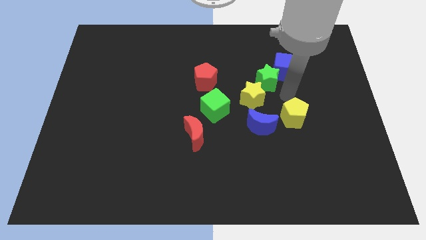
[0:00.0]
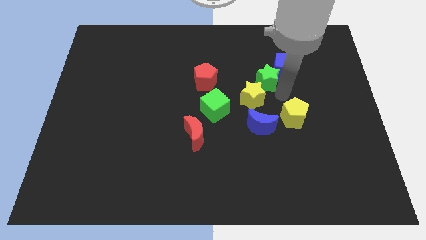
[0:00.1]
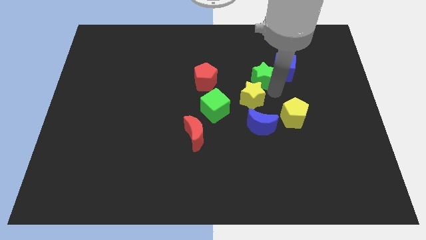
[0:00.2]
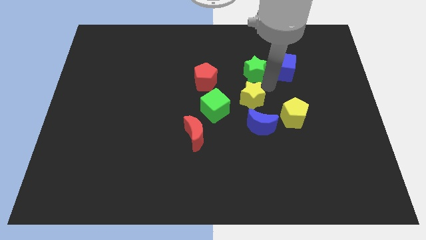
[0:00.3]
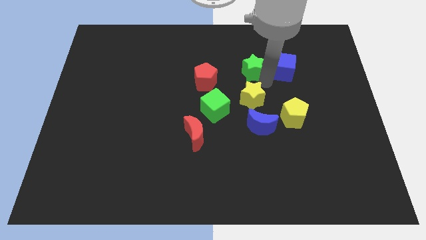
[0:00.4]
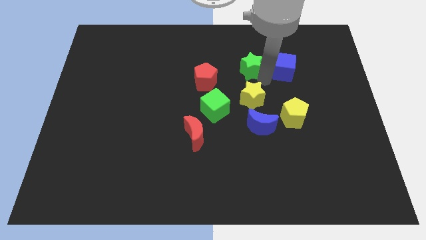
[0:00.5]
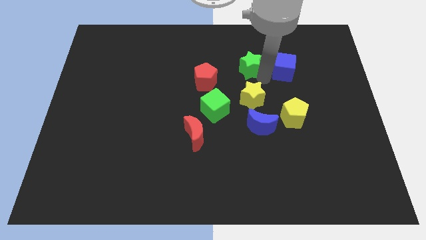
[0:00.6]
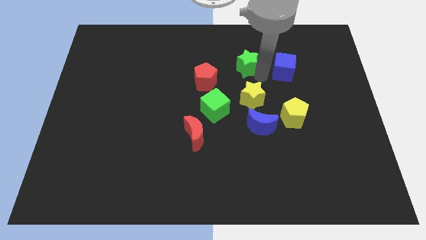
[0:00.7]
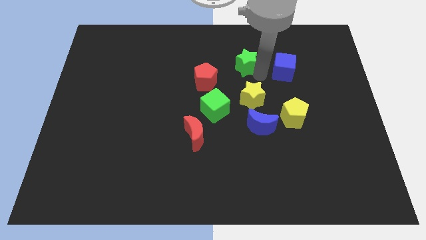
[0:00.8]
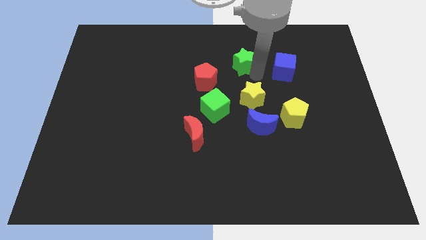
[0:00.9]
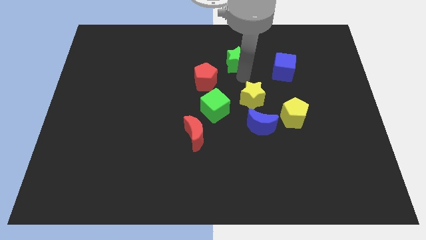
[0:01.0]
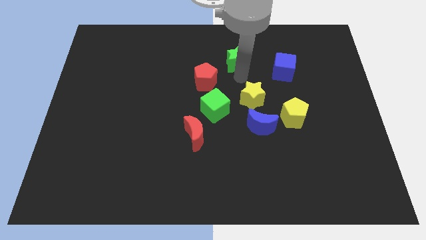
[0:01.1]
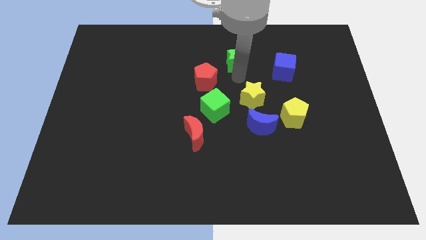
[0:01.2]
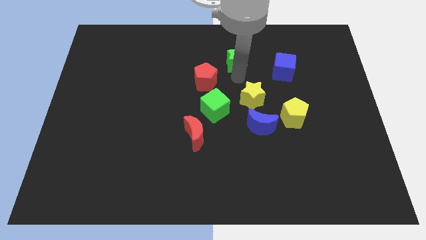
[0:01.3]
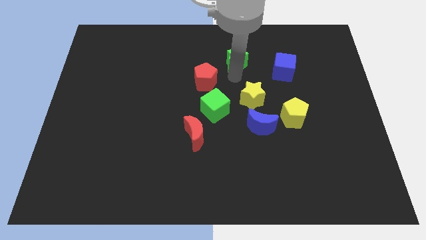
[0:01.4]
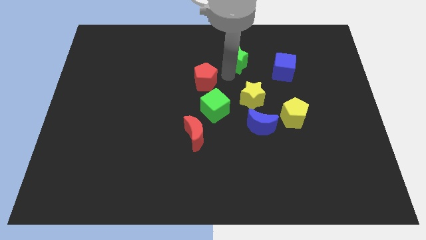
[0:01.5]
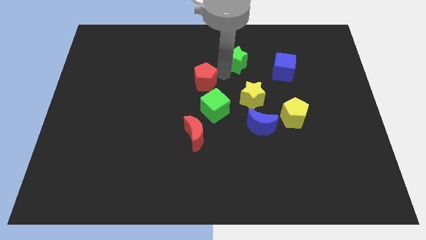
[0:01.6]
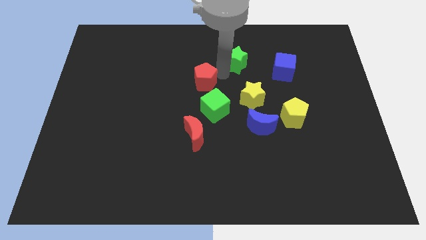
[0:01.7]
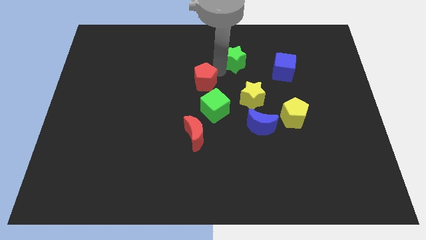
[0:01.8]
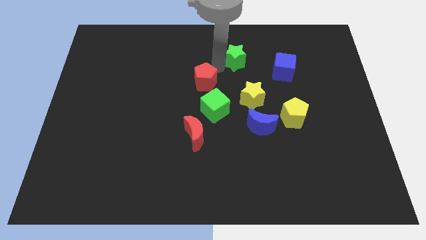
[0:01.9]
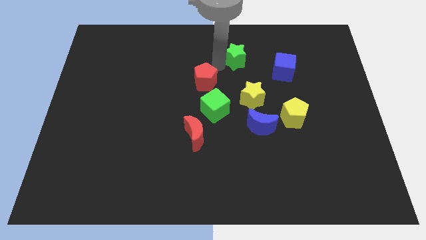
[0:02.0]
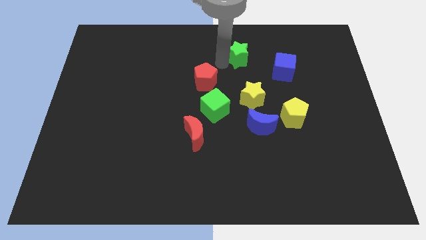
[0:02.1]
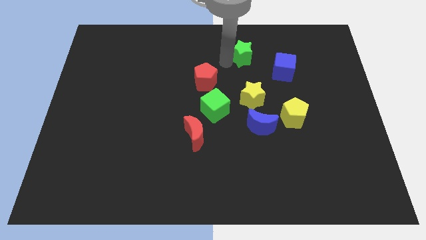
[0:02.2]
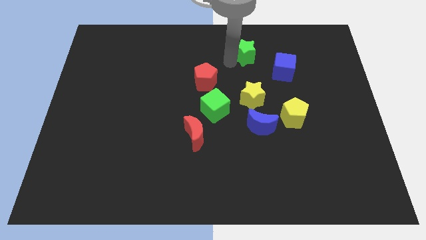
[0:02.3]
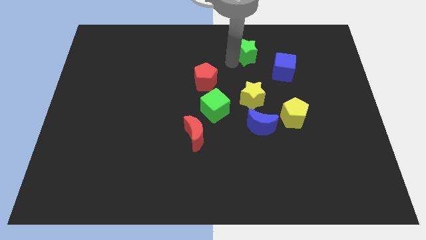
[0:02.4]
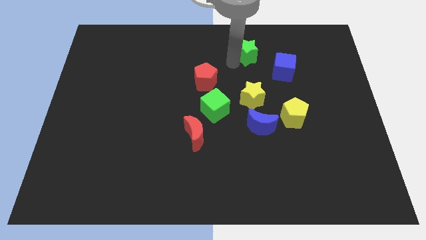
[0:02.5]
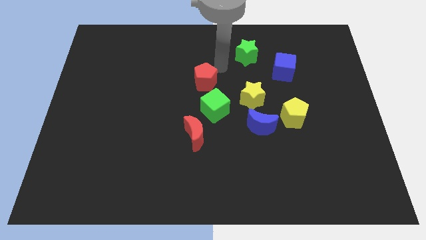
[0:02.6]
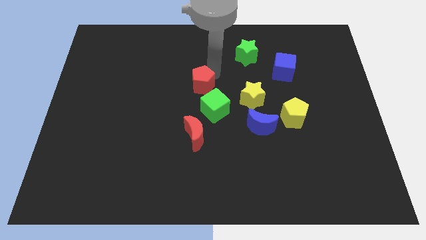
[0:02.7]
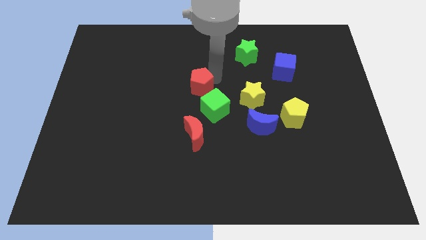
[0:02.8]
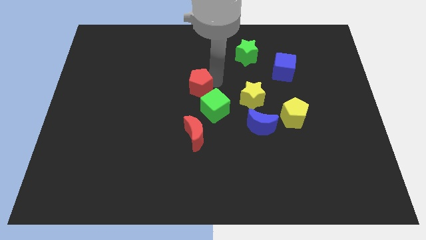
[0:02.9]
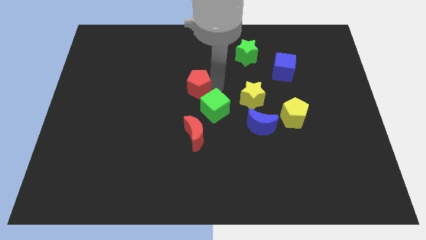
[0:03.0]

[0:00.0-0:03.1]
put the green star vertically above the yellow star

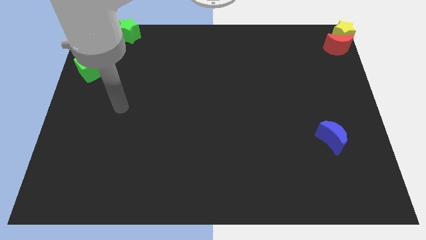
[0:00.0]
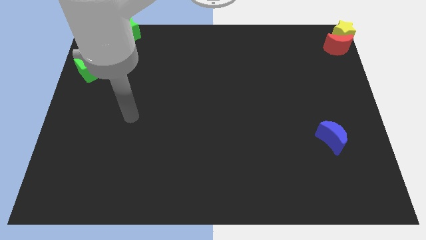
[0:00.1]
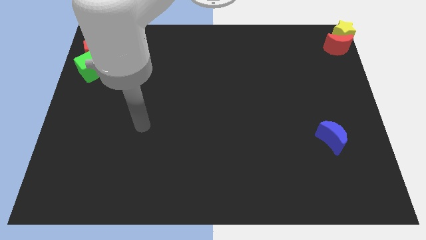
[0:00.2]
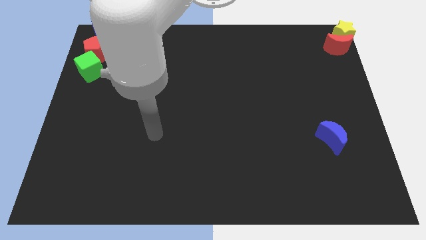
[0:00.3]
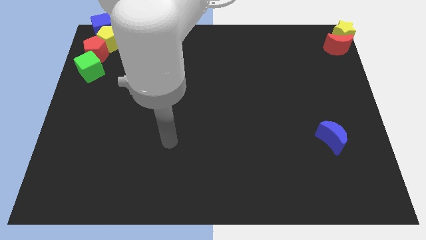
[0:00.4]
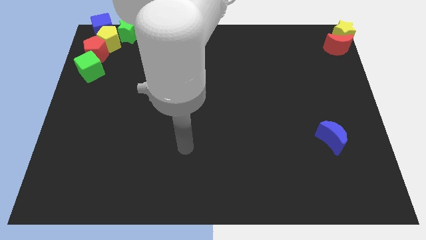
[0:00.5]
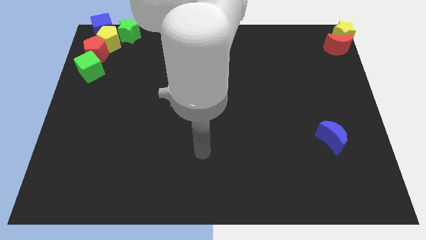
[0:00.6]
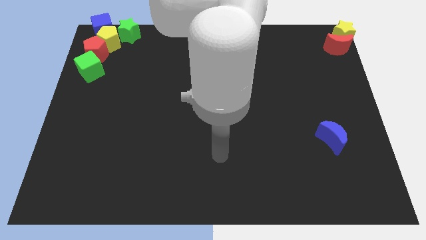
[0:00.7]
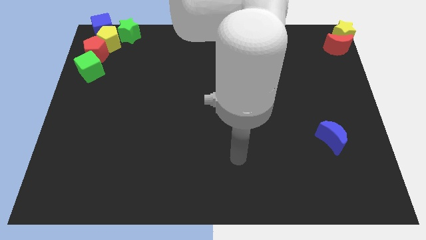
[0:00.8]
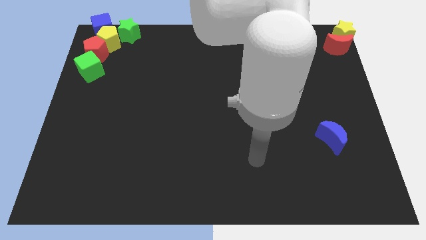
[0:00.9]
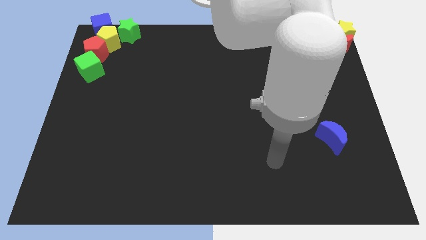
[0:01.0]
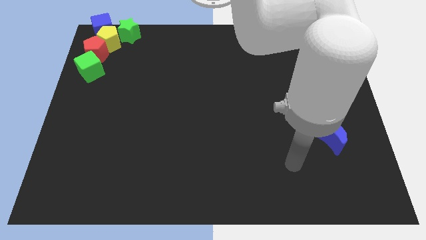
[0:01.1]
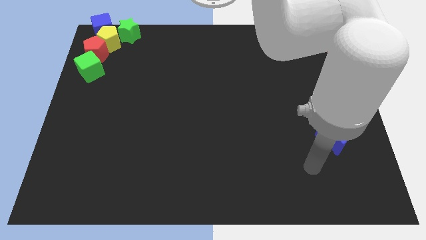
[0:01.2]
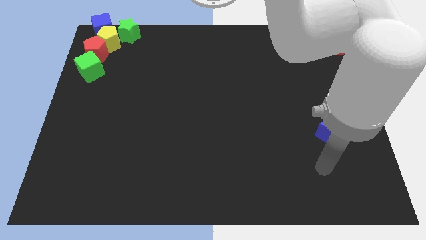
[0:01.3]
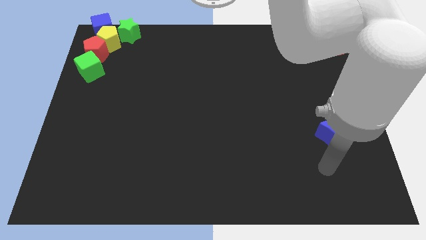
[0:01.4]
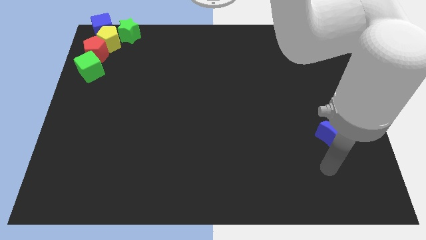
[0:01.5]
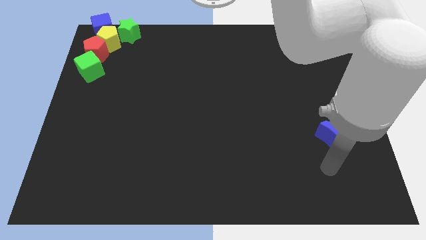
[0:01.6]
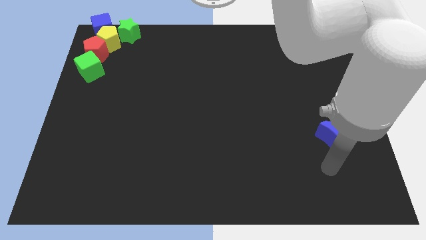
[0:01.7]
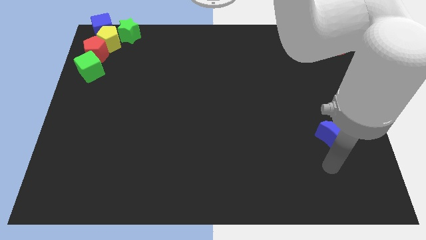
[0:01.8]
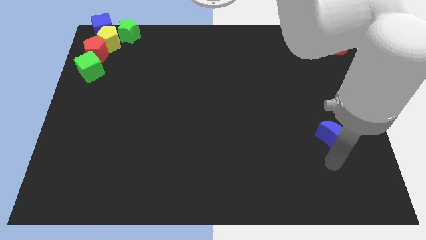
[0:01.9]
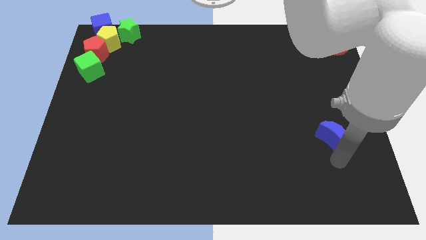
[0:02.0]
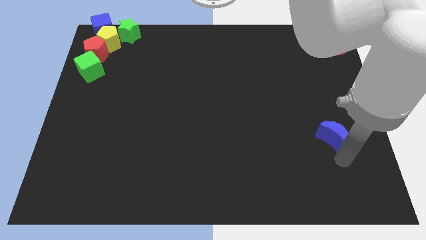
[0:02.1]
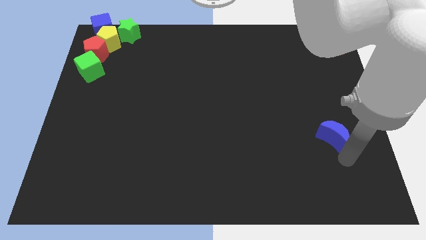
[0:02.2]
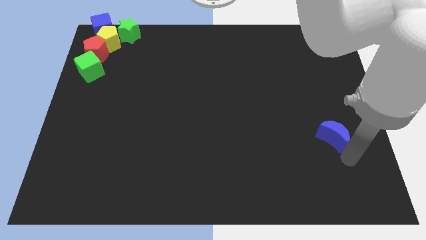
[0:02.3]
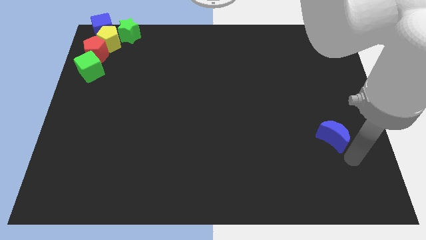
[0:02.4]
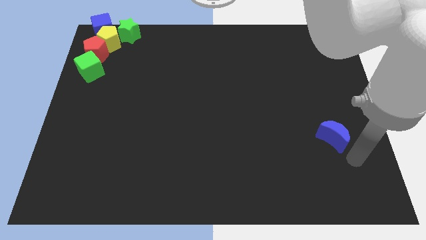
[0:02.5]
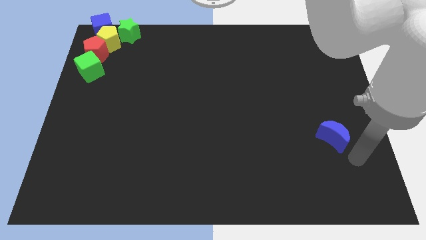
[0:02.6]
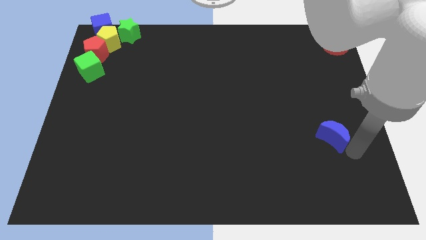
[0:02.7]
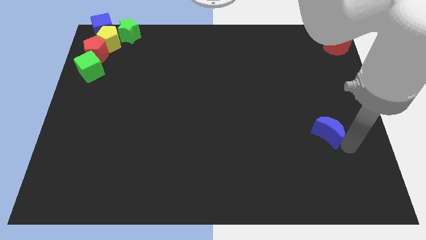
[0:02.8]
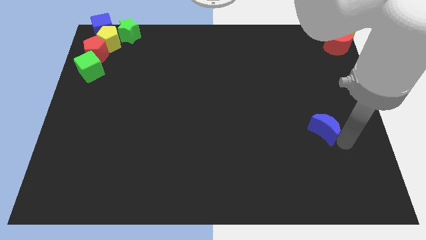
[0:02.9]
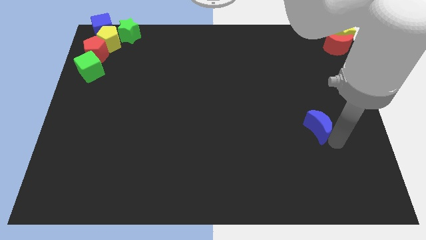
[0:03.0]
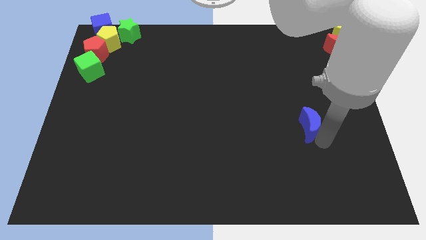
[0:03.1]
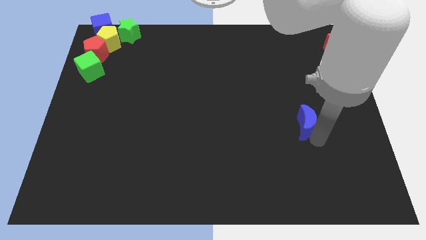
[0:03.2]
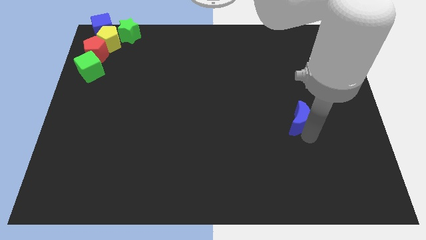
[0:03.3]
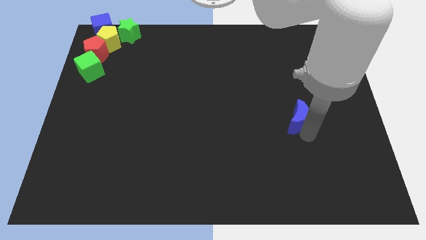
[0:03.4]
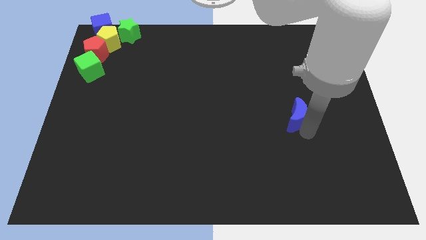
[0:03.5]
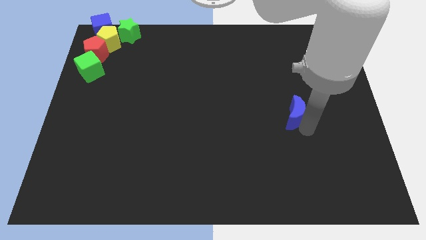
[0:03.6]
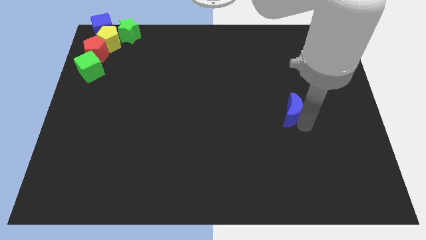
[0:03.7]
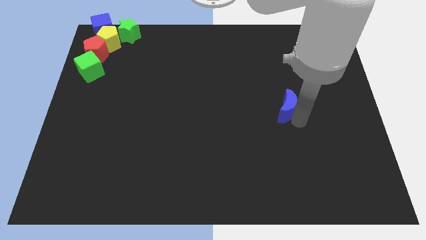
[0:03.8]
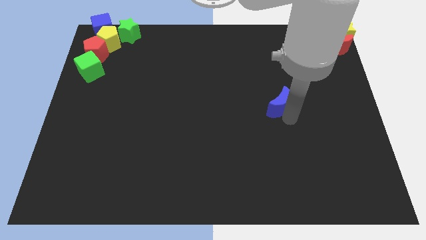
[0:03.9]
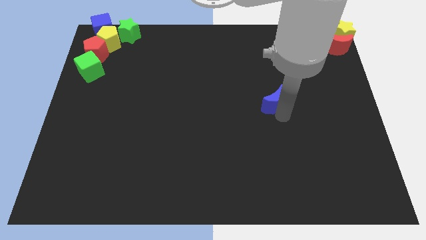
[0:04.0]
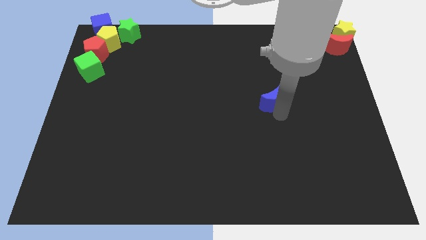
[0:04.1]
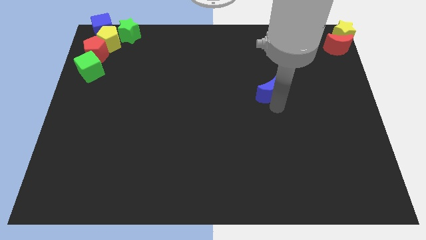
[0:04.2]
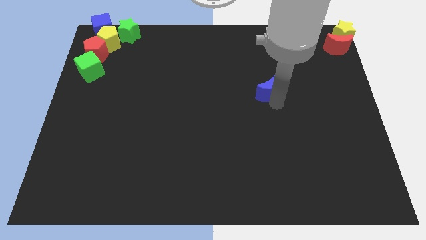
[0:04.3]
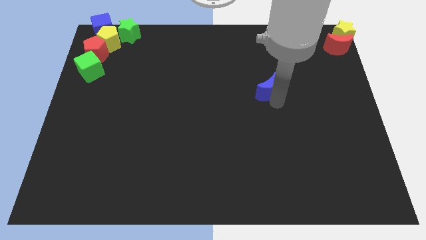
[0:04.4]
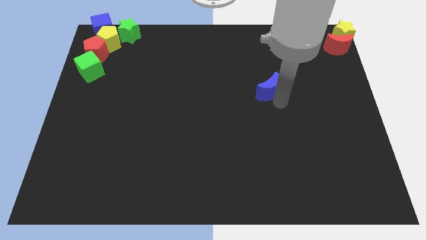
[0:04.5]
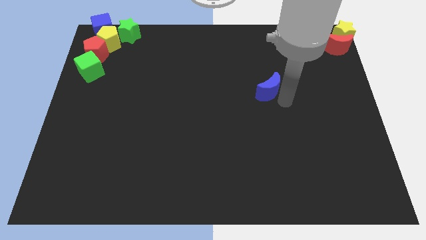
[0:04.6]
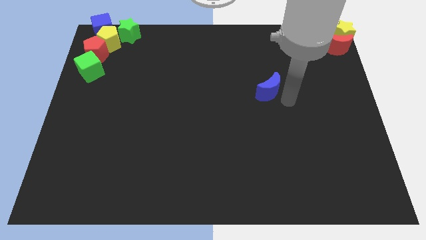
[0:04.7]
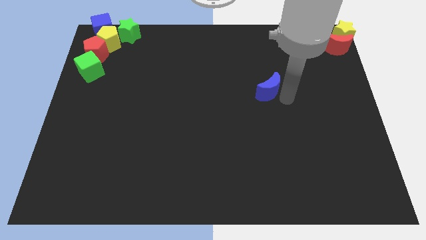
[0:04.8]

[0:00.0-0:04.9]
move the blue moon diagonal to the red moon

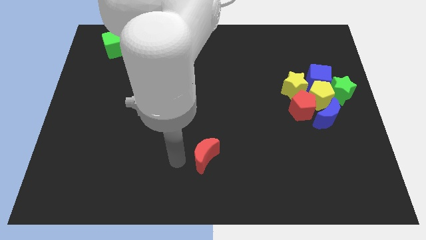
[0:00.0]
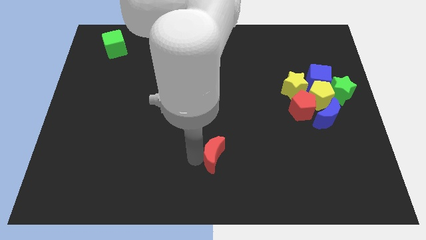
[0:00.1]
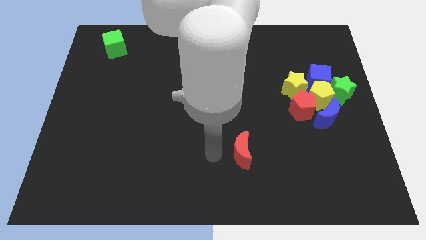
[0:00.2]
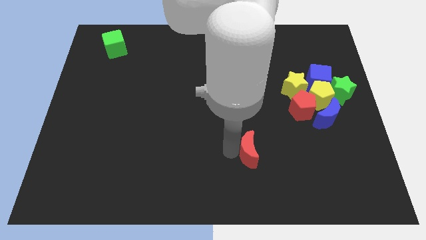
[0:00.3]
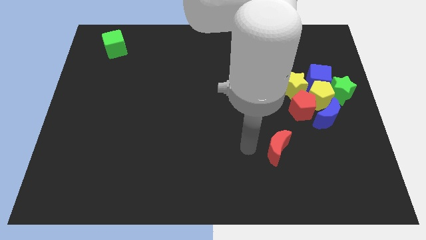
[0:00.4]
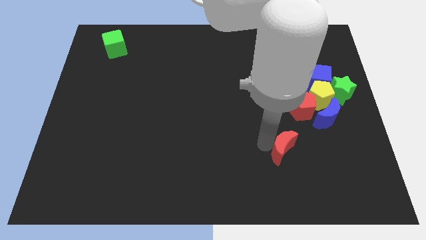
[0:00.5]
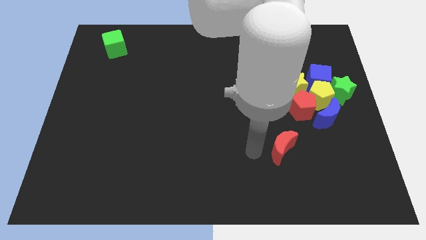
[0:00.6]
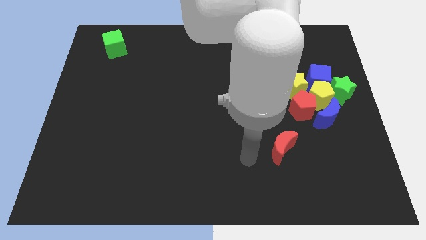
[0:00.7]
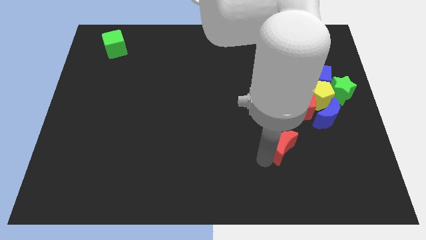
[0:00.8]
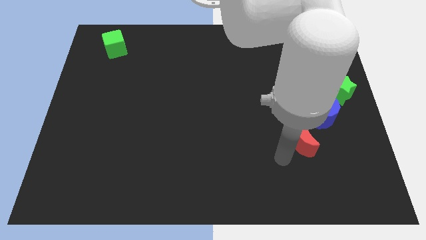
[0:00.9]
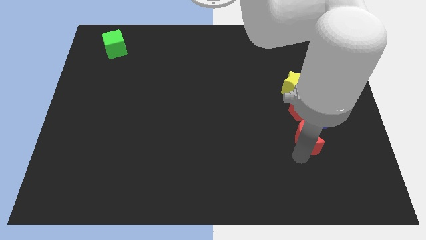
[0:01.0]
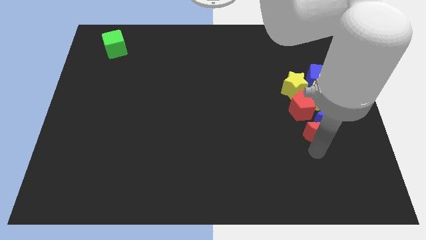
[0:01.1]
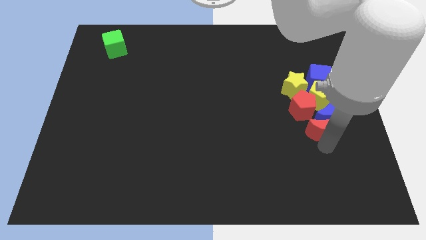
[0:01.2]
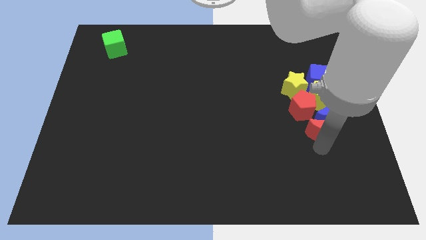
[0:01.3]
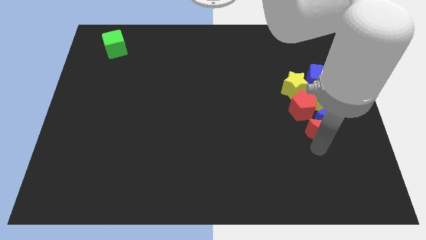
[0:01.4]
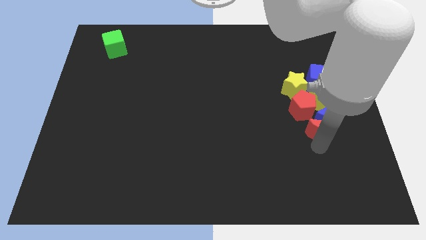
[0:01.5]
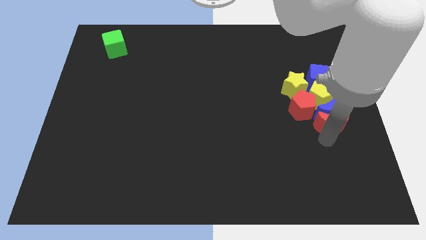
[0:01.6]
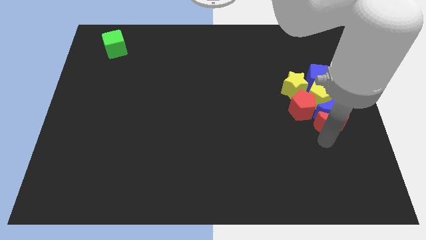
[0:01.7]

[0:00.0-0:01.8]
move the red moon into the group of the blocks
